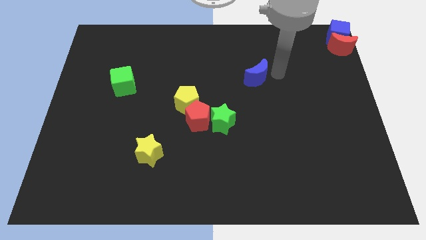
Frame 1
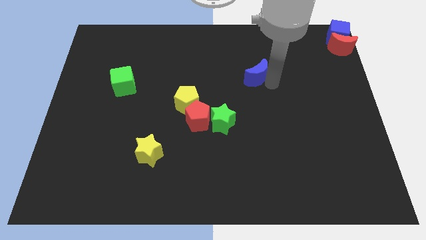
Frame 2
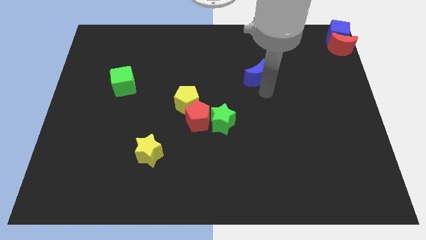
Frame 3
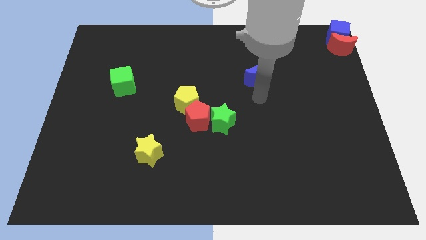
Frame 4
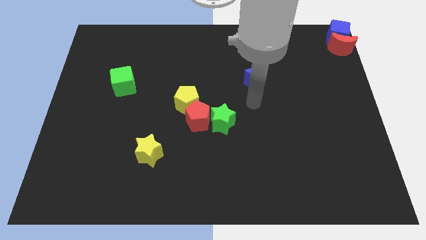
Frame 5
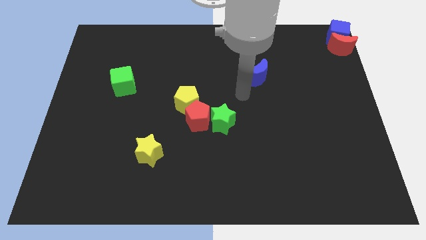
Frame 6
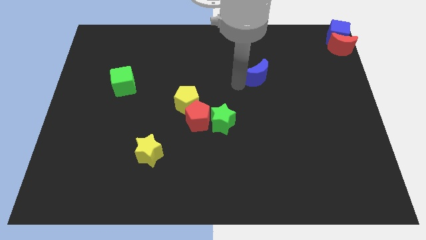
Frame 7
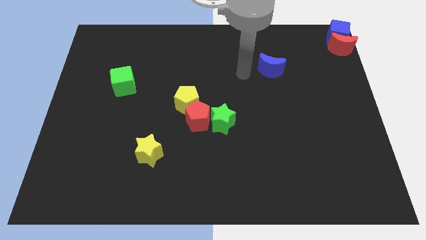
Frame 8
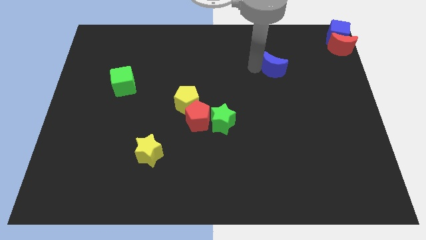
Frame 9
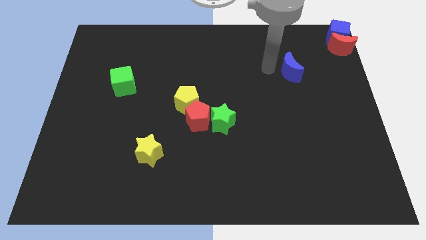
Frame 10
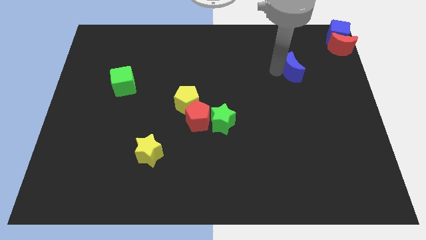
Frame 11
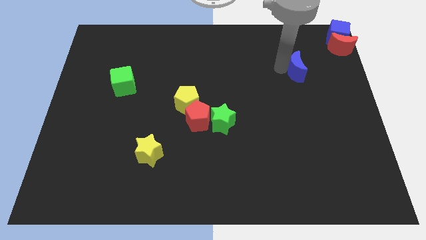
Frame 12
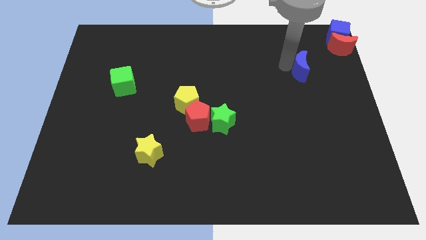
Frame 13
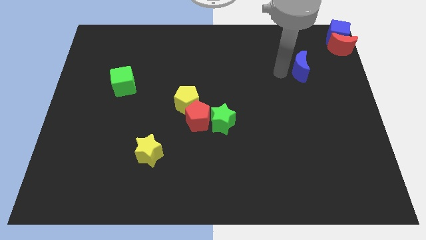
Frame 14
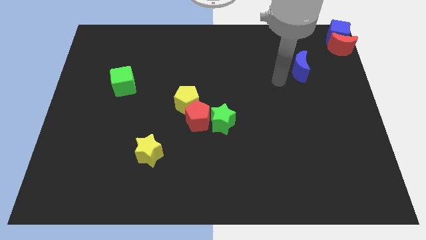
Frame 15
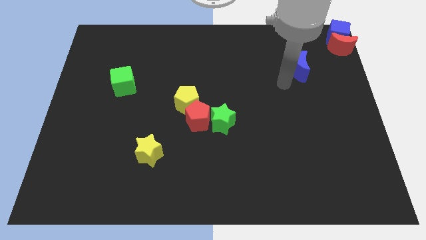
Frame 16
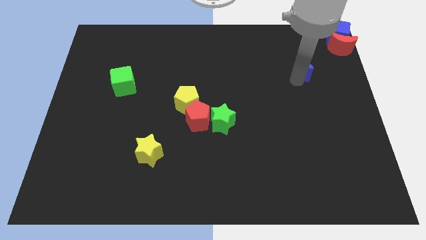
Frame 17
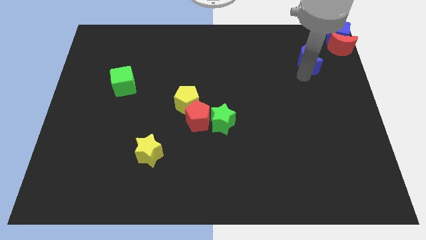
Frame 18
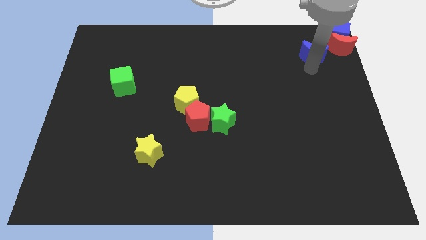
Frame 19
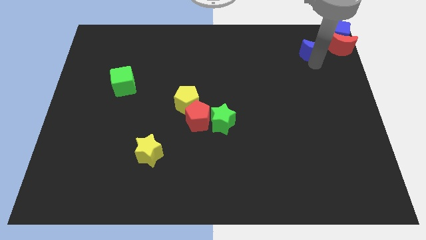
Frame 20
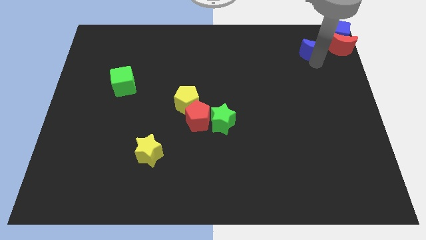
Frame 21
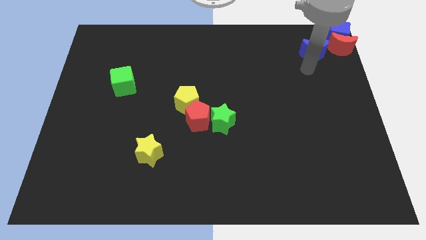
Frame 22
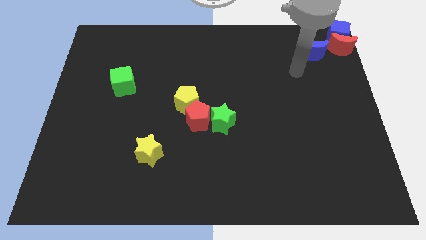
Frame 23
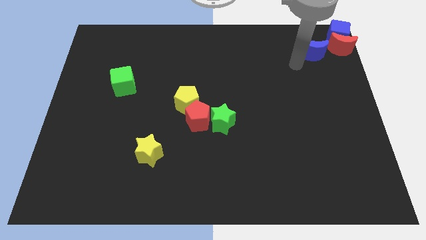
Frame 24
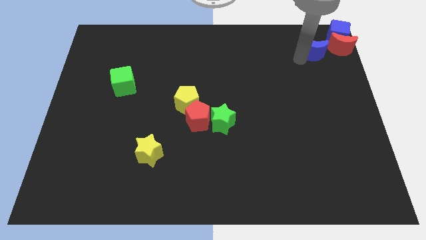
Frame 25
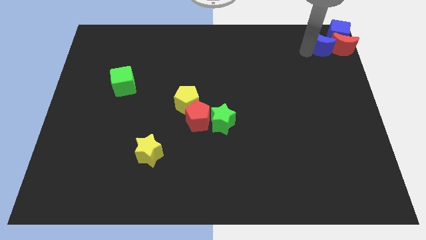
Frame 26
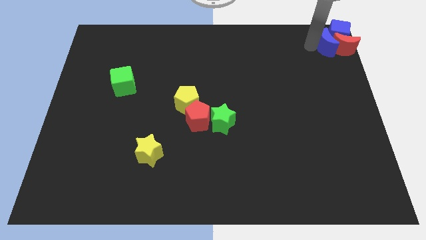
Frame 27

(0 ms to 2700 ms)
move the blue crescent to the left of the red crescent

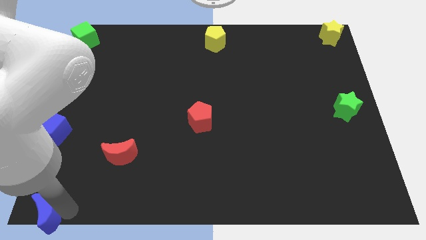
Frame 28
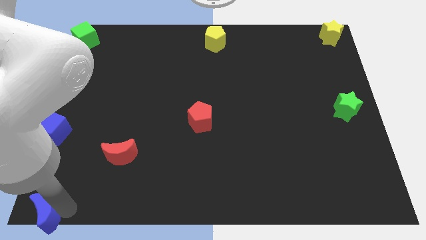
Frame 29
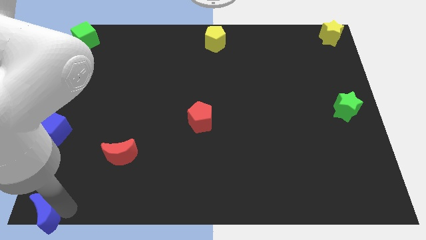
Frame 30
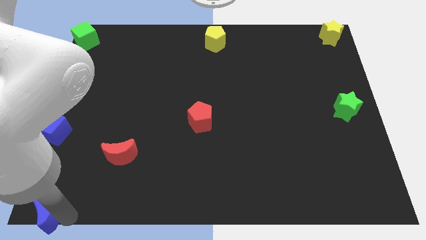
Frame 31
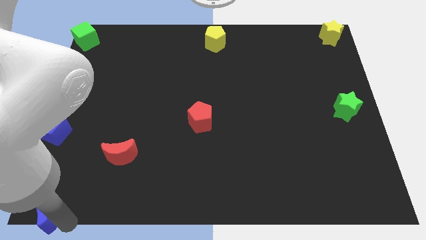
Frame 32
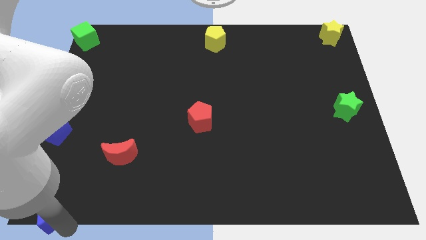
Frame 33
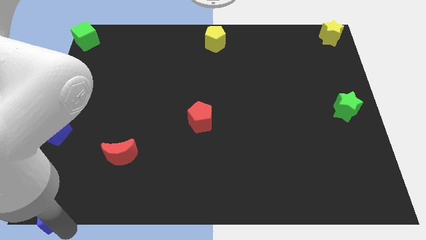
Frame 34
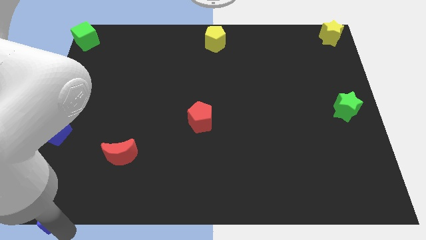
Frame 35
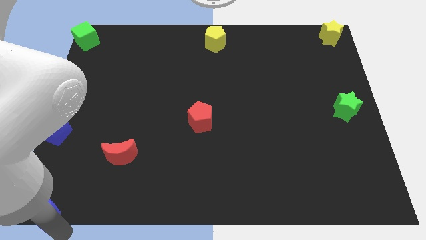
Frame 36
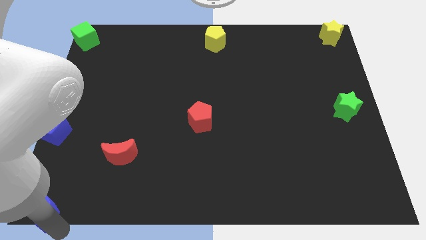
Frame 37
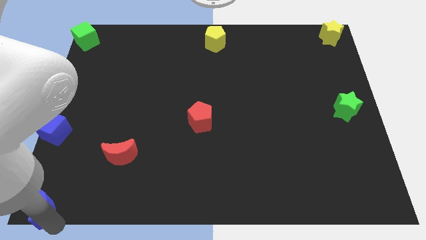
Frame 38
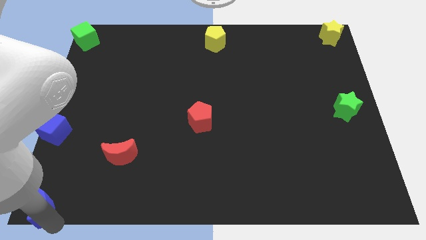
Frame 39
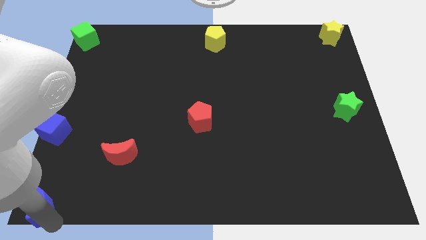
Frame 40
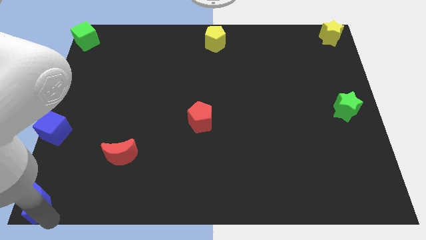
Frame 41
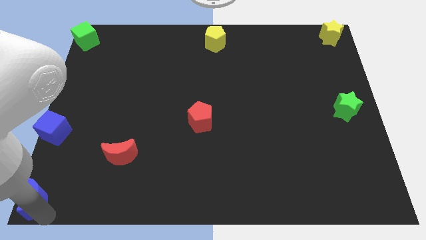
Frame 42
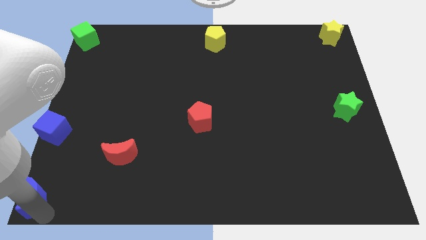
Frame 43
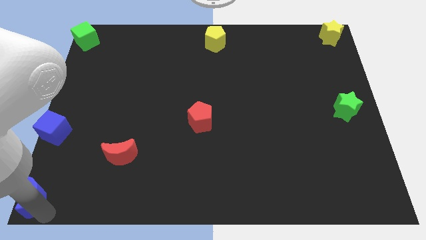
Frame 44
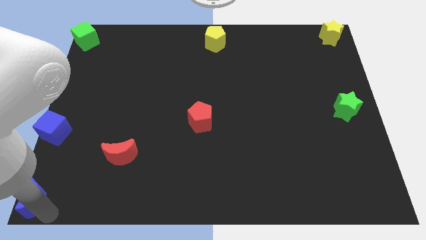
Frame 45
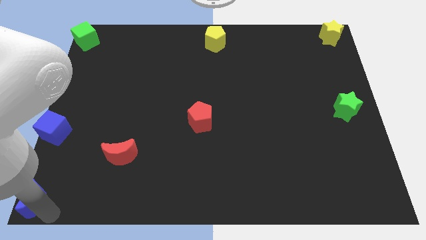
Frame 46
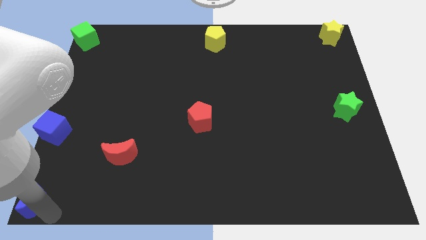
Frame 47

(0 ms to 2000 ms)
place the blue crescent at the bottom left corner of the board

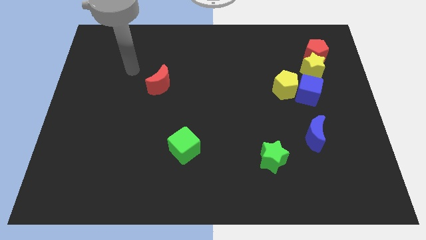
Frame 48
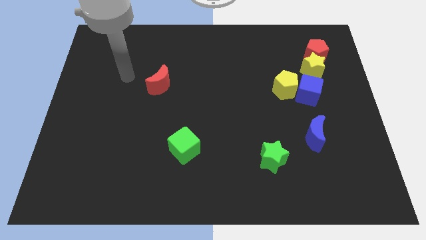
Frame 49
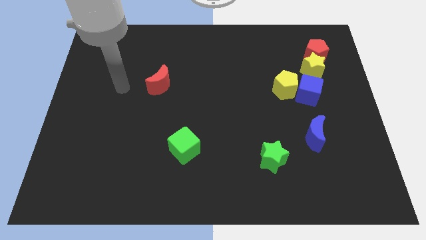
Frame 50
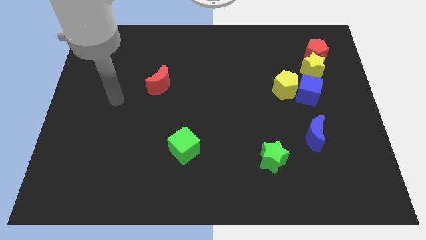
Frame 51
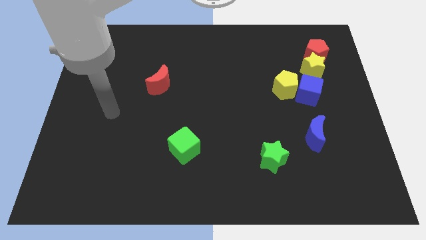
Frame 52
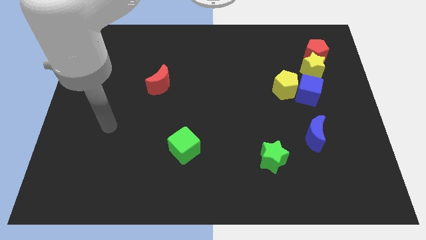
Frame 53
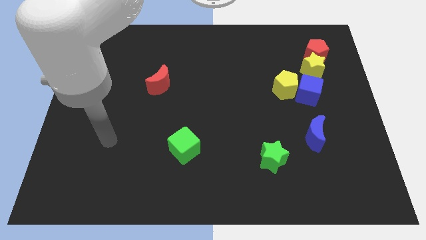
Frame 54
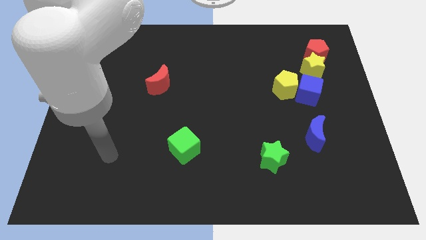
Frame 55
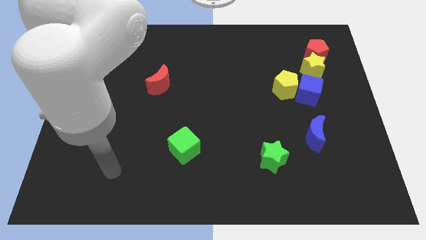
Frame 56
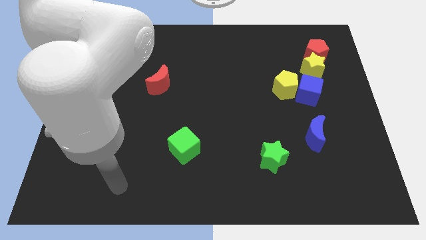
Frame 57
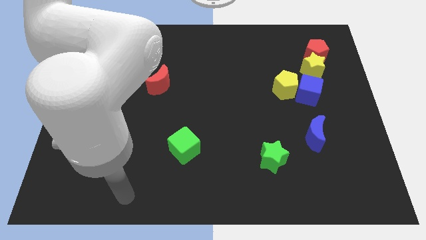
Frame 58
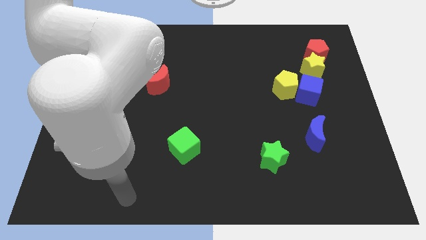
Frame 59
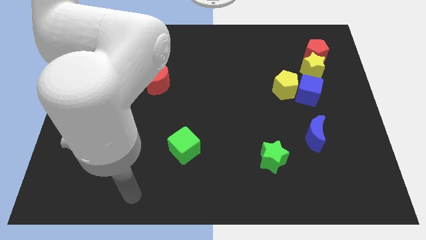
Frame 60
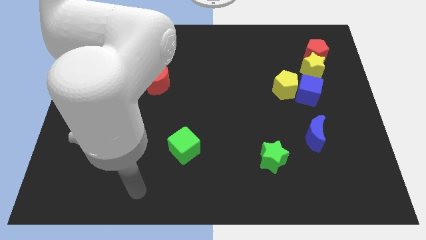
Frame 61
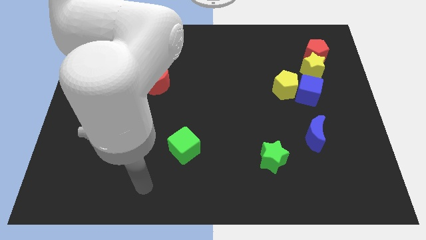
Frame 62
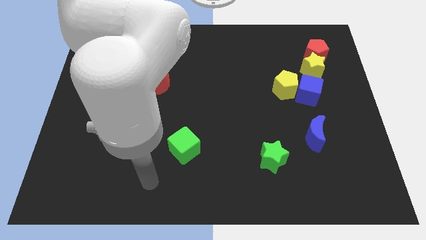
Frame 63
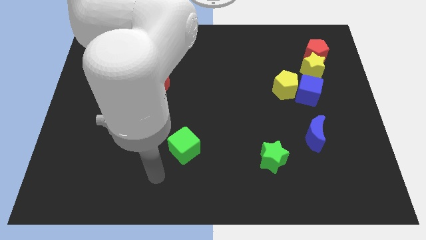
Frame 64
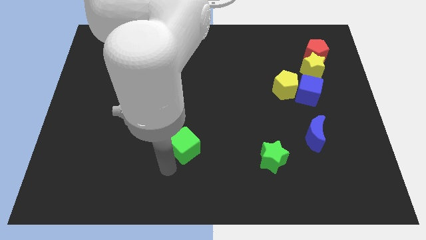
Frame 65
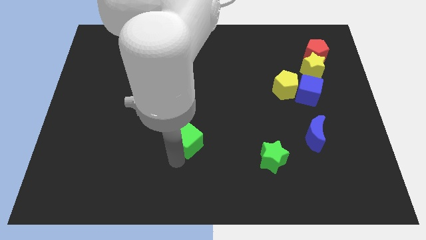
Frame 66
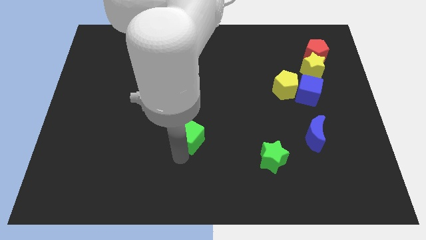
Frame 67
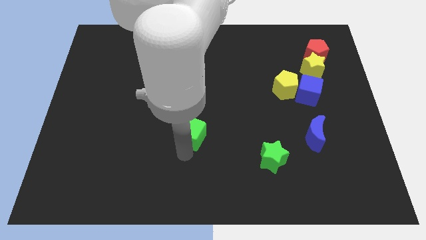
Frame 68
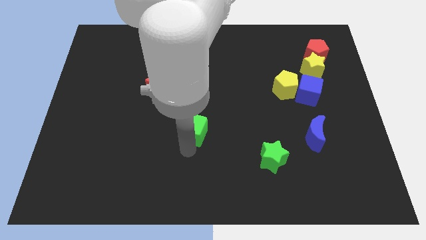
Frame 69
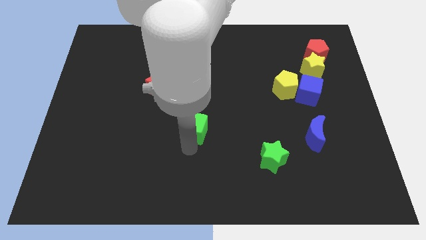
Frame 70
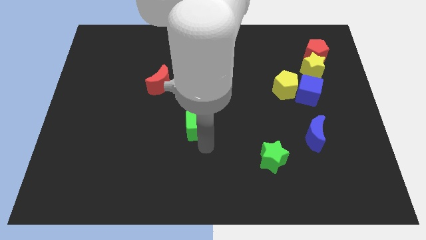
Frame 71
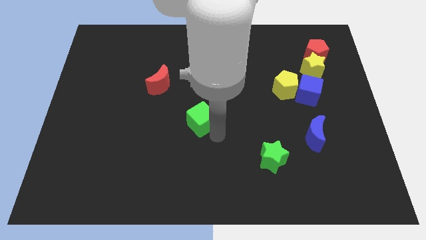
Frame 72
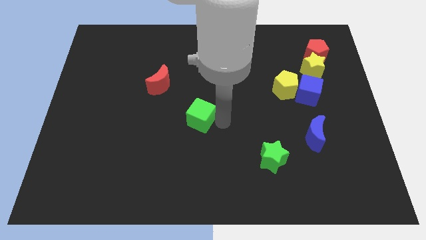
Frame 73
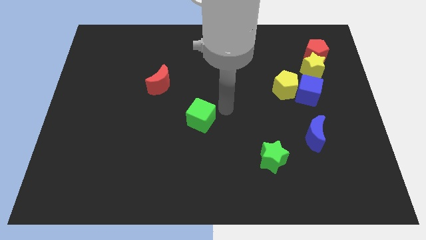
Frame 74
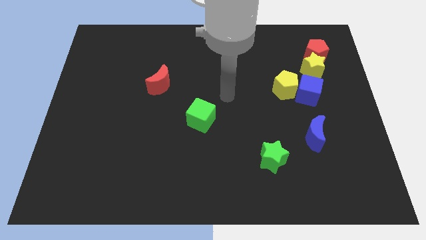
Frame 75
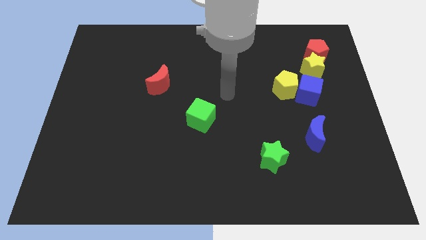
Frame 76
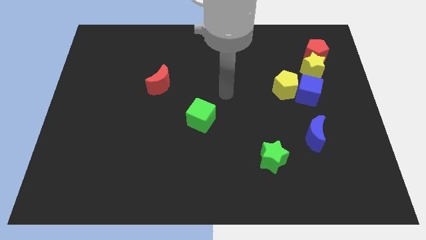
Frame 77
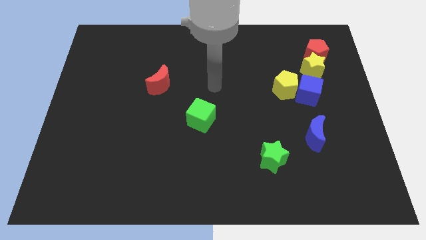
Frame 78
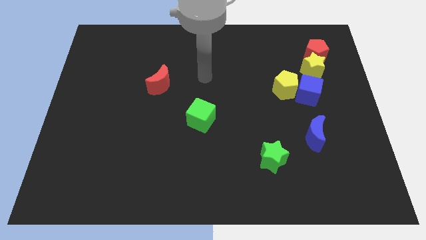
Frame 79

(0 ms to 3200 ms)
move the green cube to the center of the board

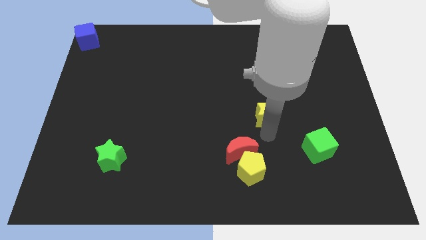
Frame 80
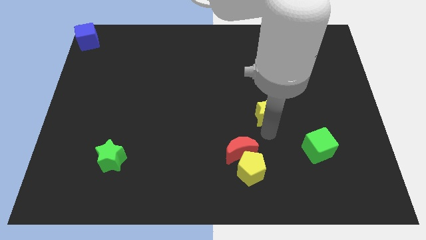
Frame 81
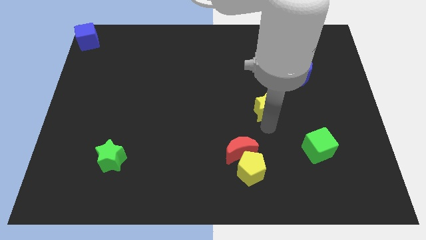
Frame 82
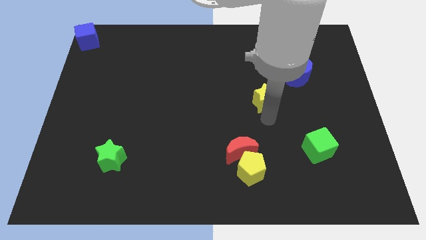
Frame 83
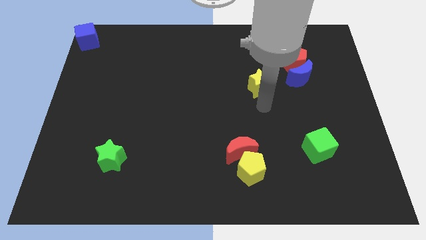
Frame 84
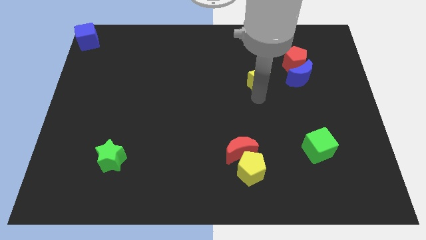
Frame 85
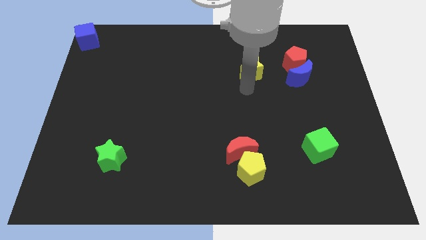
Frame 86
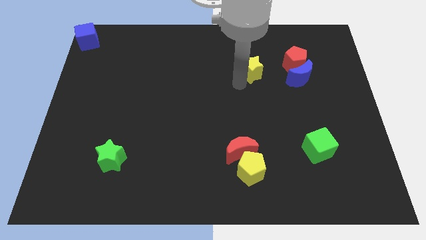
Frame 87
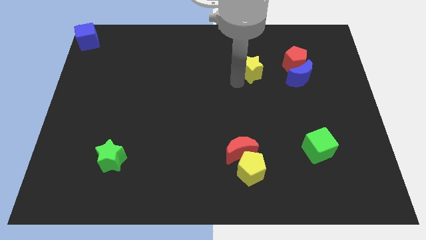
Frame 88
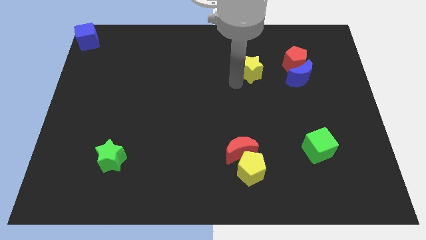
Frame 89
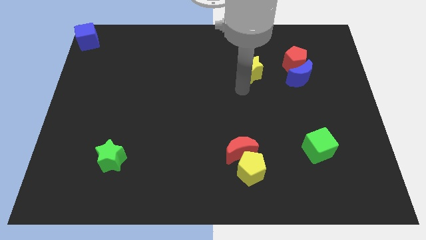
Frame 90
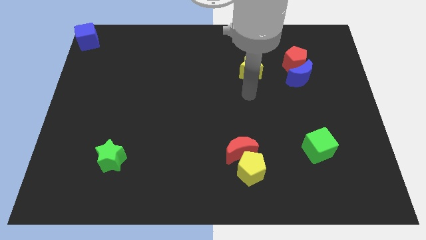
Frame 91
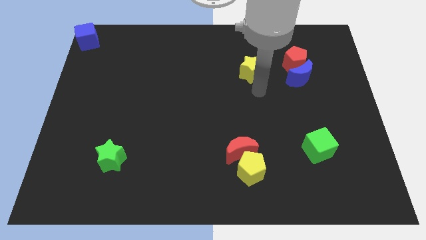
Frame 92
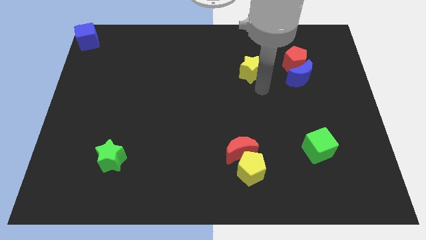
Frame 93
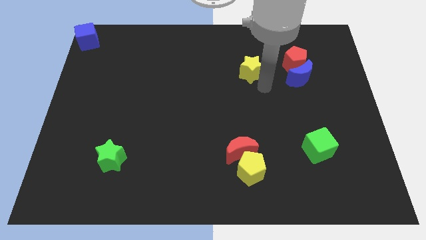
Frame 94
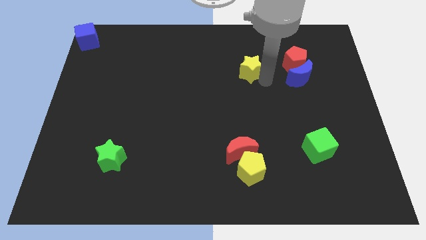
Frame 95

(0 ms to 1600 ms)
move the yellow star towards the top of the board
